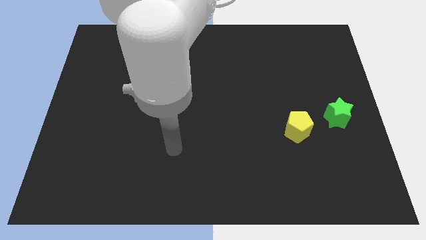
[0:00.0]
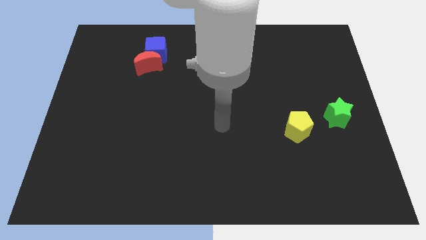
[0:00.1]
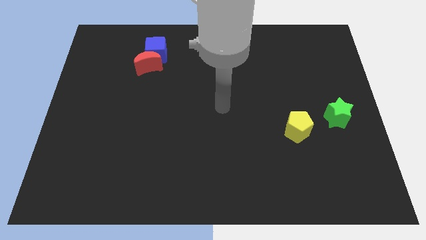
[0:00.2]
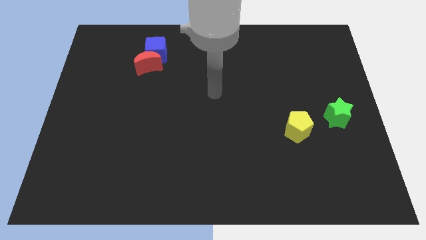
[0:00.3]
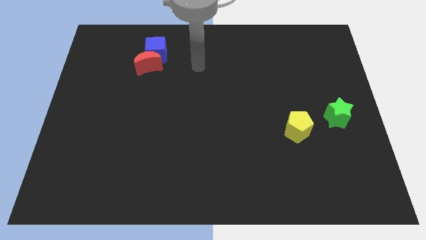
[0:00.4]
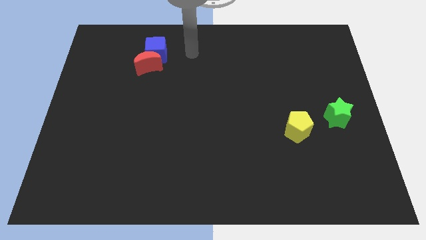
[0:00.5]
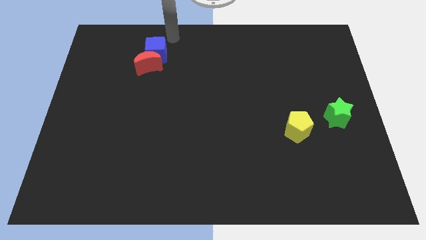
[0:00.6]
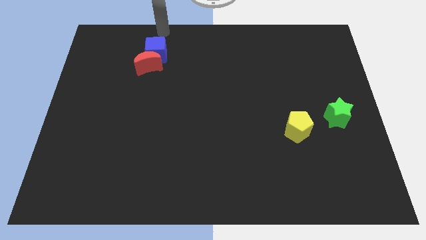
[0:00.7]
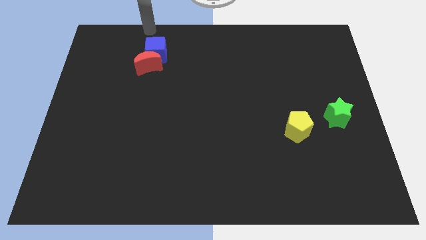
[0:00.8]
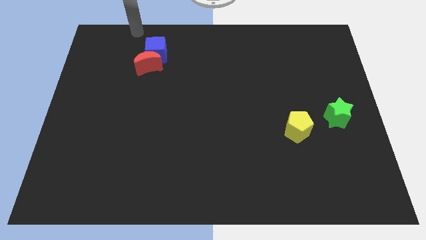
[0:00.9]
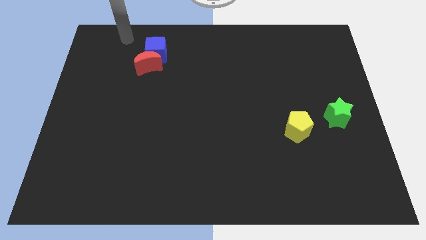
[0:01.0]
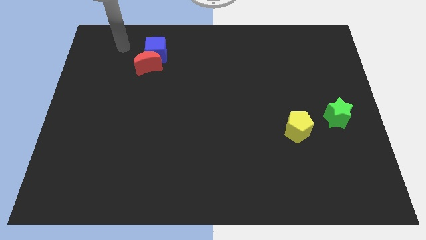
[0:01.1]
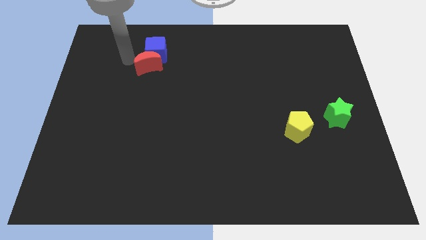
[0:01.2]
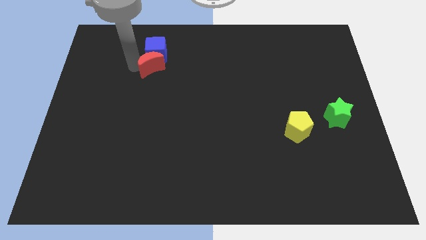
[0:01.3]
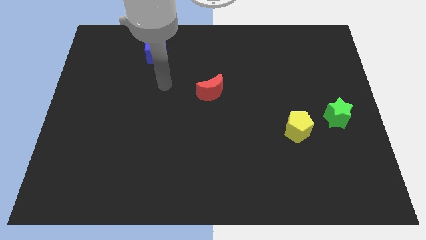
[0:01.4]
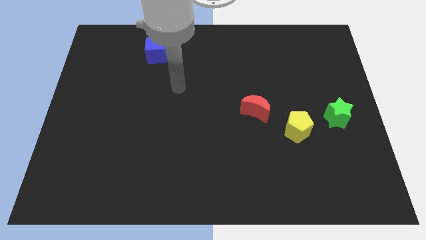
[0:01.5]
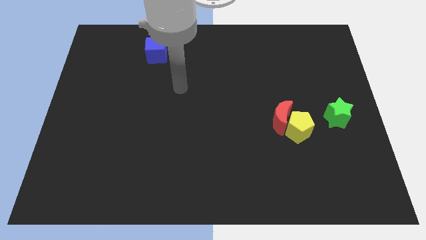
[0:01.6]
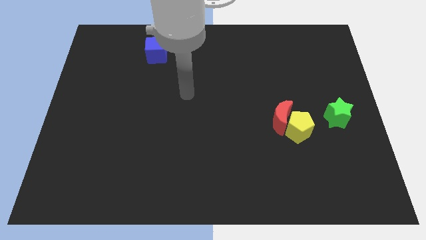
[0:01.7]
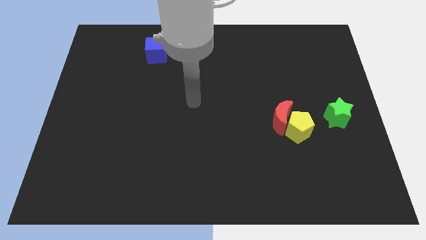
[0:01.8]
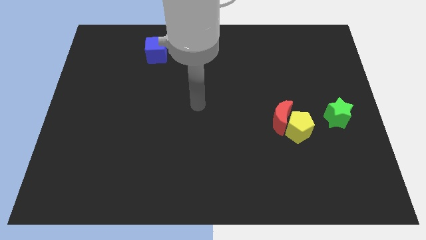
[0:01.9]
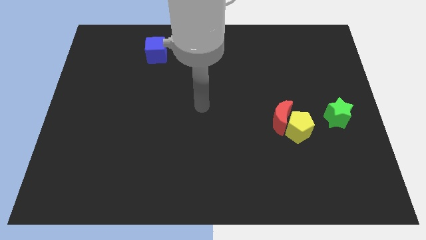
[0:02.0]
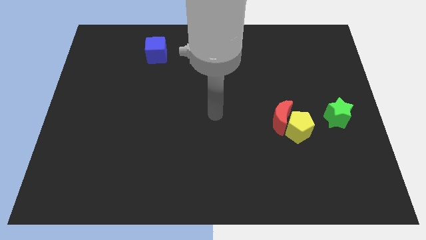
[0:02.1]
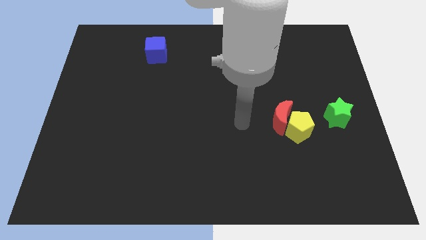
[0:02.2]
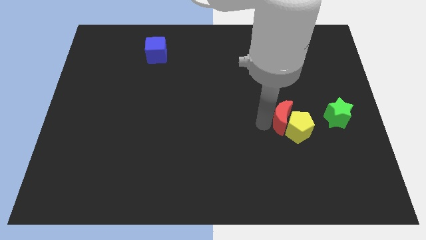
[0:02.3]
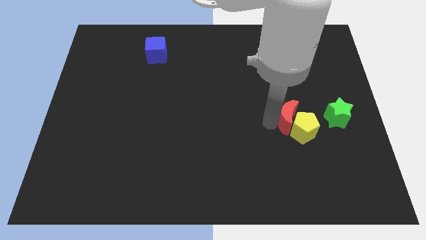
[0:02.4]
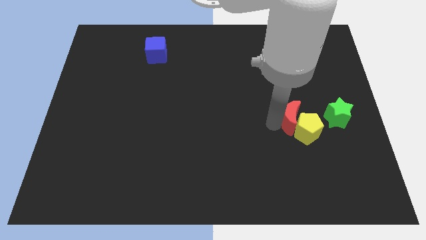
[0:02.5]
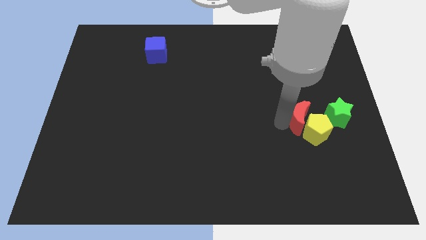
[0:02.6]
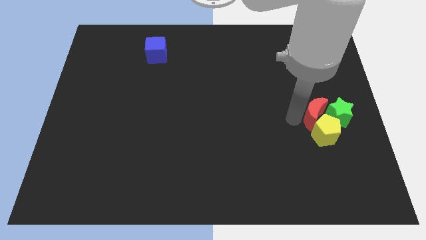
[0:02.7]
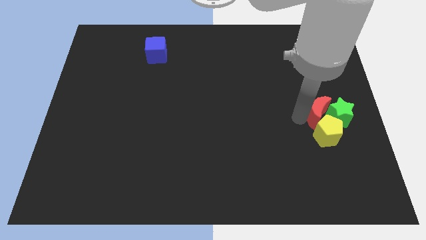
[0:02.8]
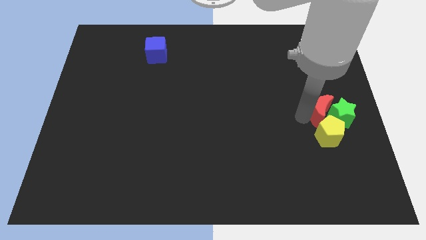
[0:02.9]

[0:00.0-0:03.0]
move the red moon close to the green block

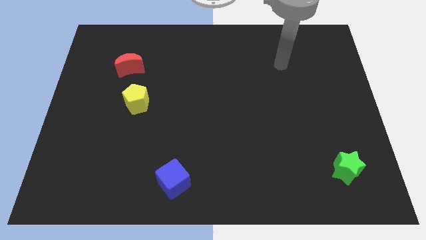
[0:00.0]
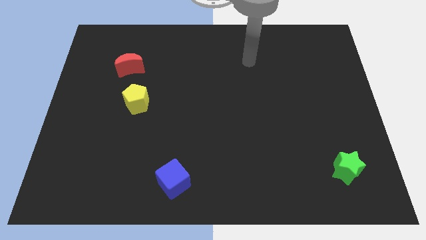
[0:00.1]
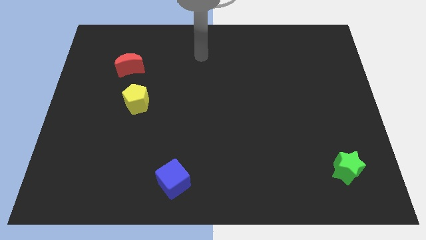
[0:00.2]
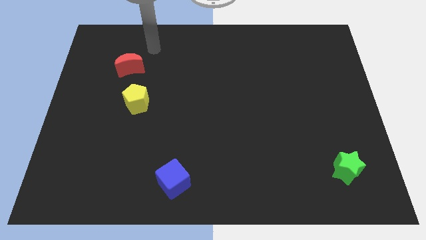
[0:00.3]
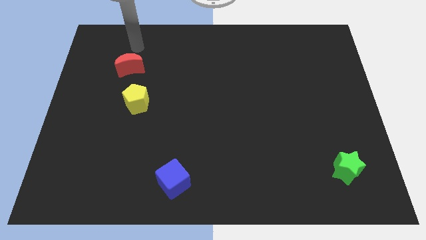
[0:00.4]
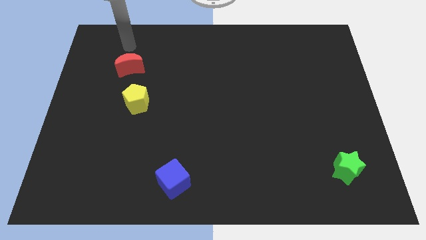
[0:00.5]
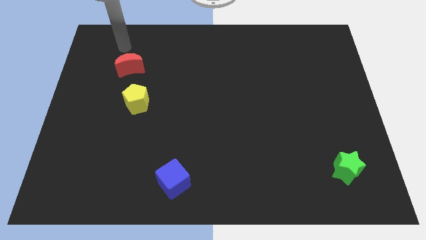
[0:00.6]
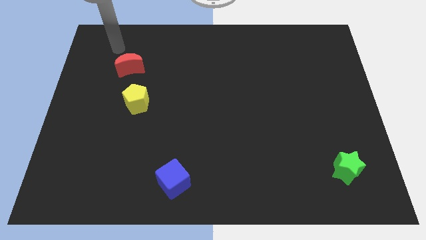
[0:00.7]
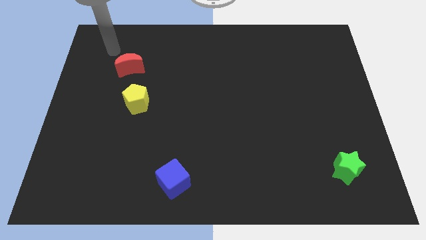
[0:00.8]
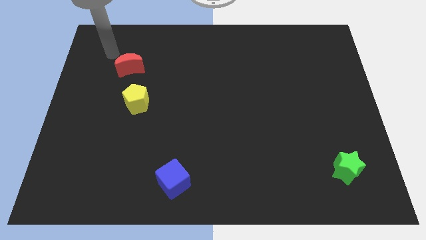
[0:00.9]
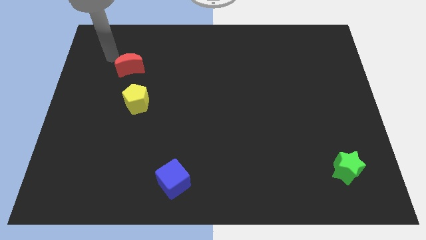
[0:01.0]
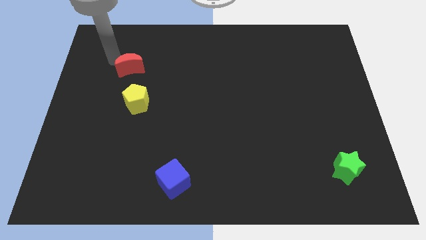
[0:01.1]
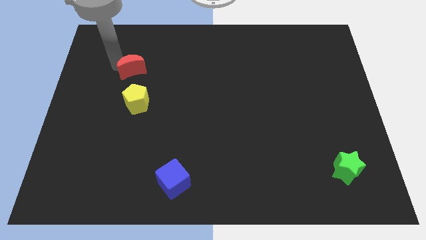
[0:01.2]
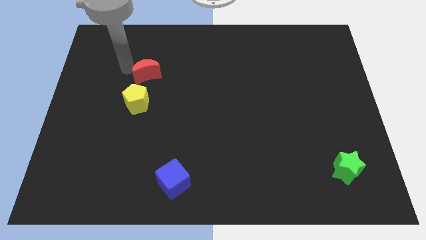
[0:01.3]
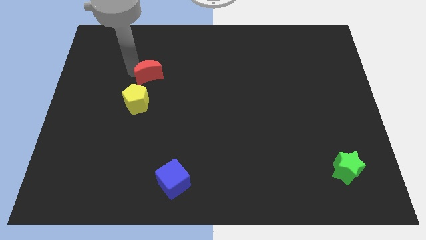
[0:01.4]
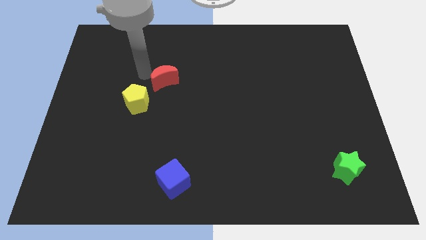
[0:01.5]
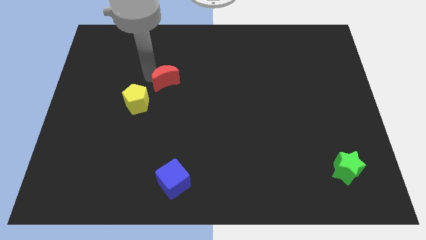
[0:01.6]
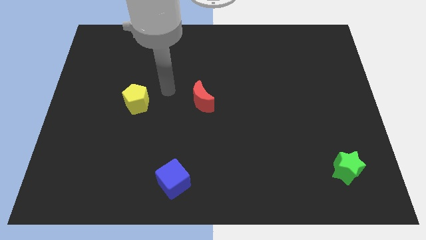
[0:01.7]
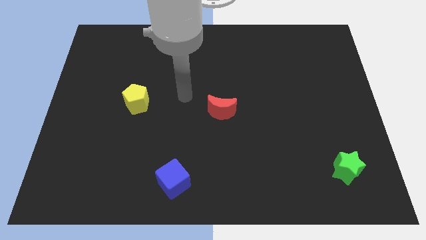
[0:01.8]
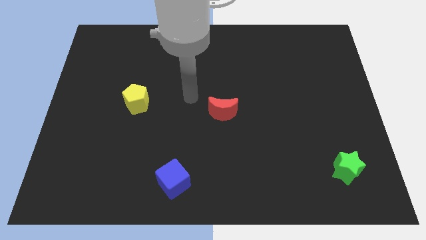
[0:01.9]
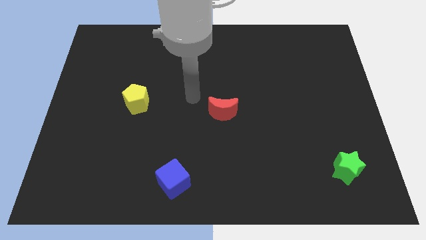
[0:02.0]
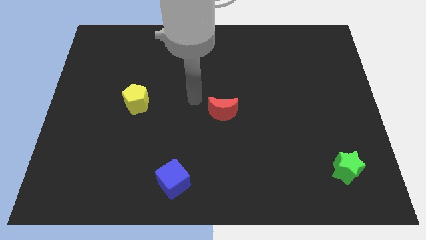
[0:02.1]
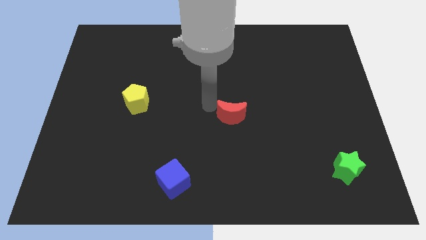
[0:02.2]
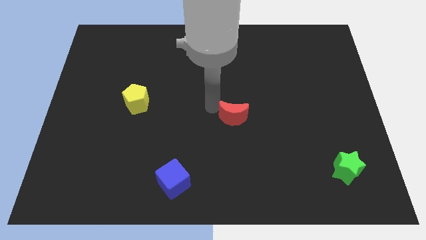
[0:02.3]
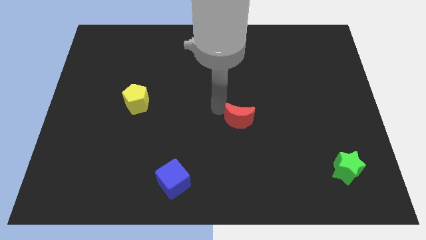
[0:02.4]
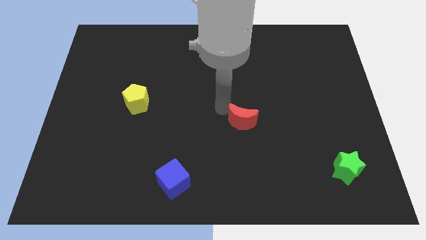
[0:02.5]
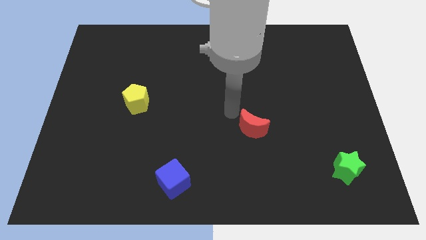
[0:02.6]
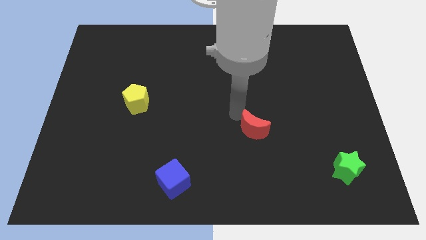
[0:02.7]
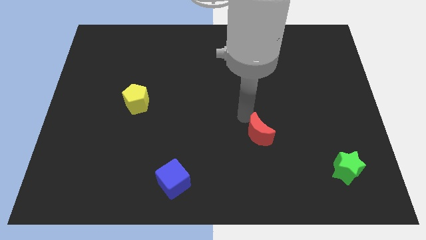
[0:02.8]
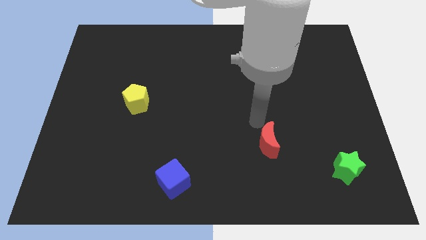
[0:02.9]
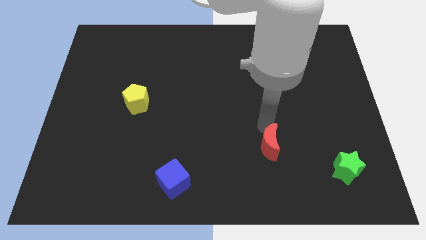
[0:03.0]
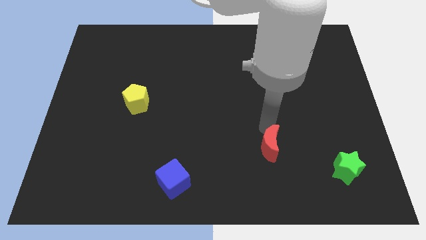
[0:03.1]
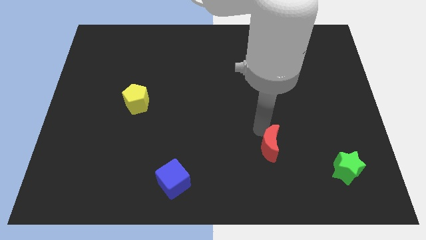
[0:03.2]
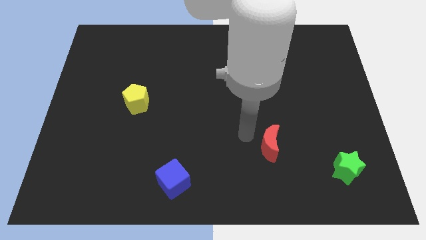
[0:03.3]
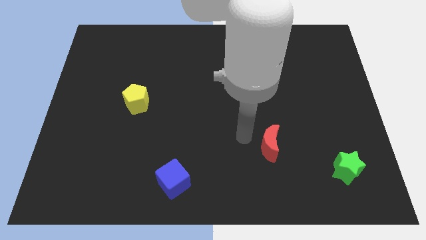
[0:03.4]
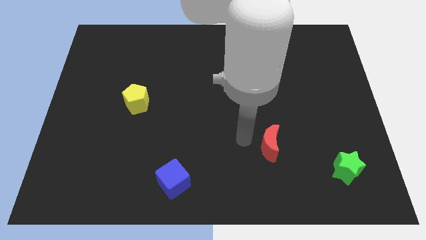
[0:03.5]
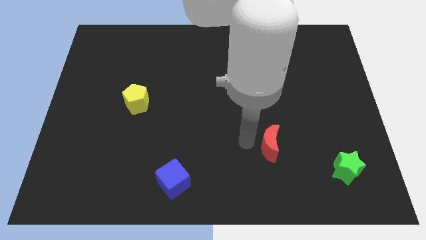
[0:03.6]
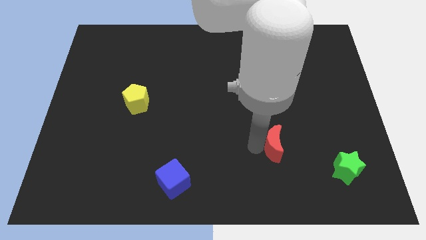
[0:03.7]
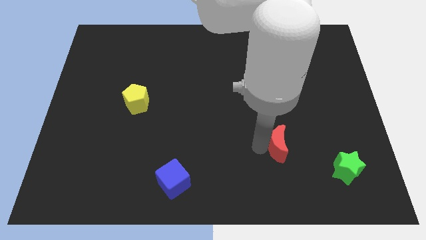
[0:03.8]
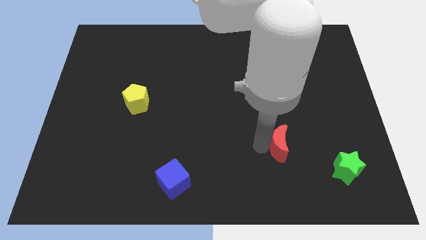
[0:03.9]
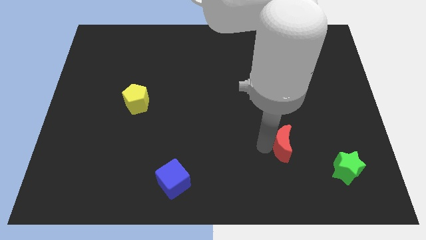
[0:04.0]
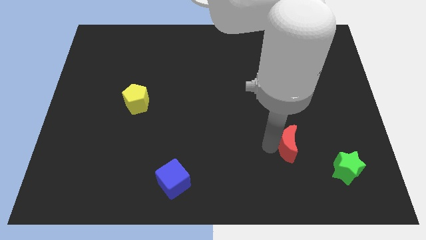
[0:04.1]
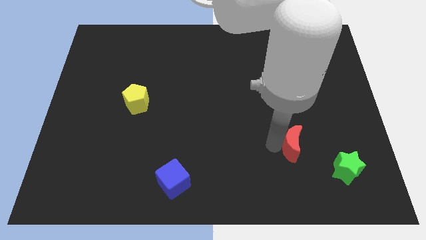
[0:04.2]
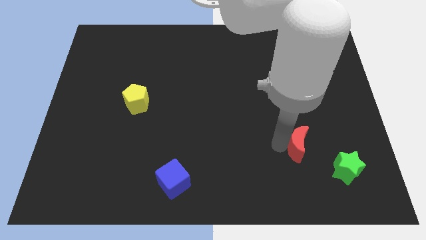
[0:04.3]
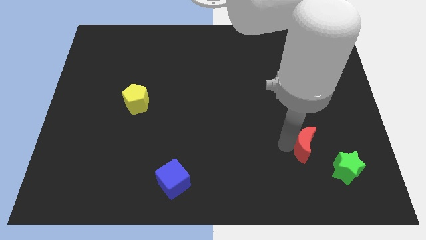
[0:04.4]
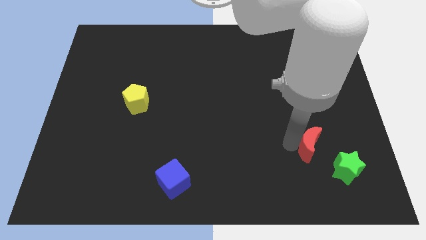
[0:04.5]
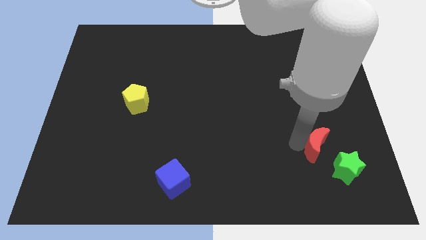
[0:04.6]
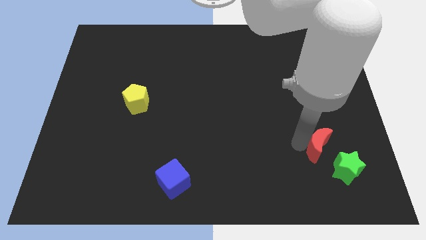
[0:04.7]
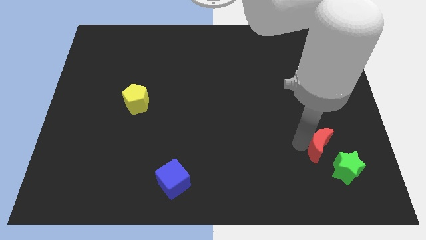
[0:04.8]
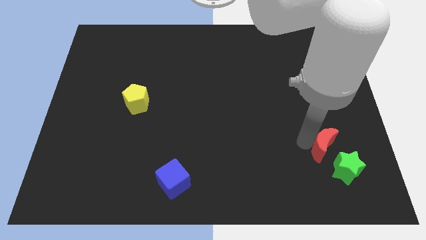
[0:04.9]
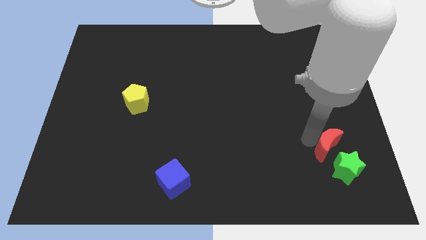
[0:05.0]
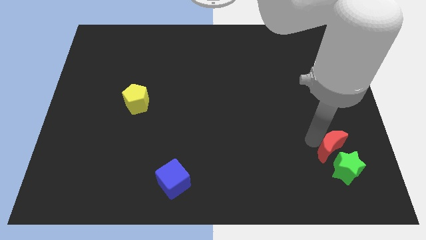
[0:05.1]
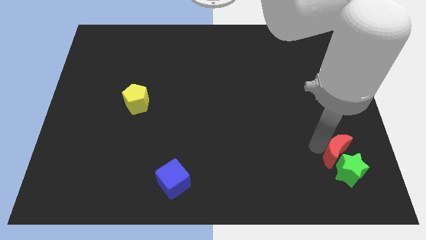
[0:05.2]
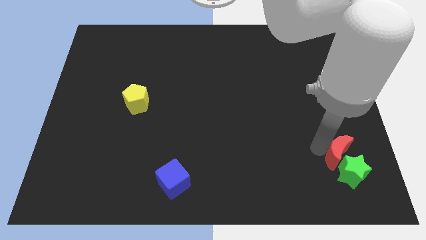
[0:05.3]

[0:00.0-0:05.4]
move the red moon next to the star

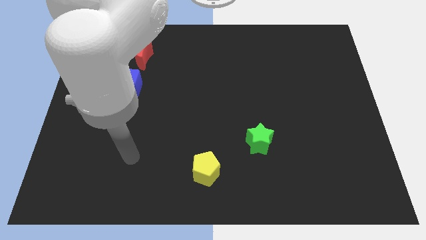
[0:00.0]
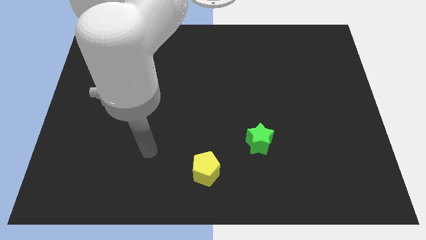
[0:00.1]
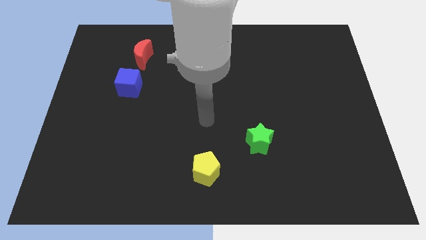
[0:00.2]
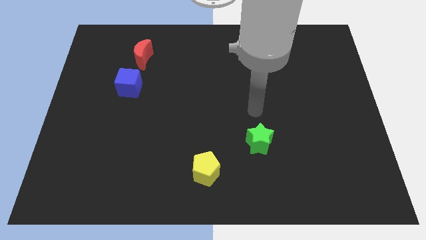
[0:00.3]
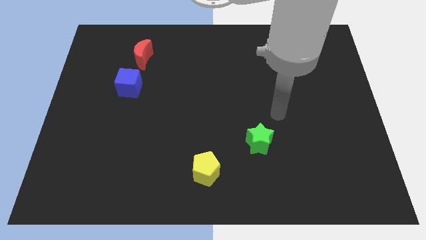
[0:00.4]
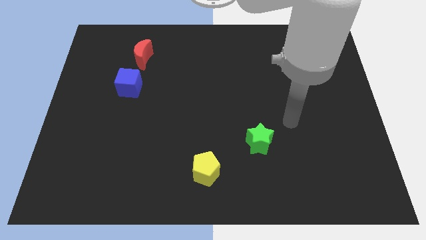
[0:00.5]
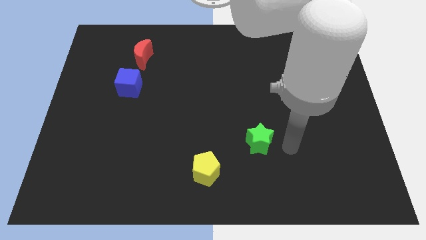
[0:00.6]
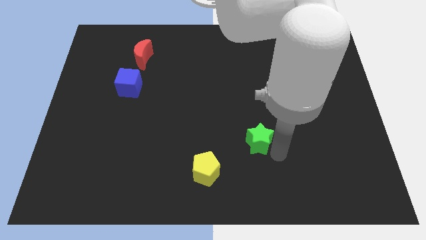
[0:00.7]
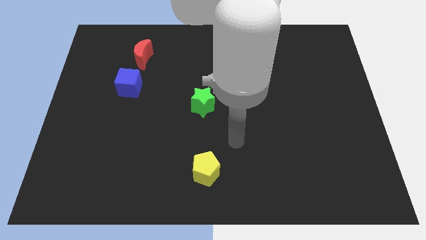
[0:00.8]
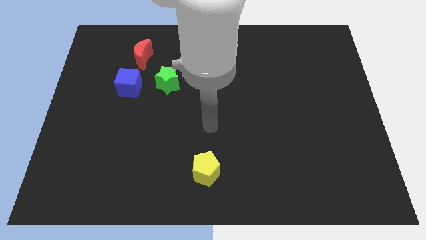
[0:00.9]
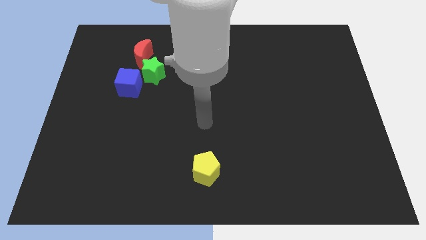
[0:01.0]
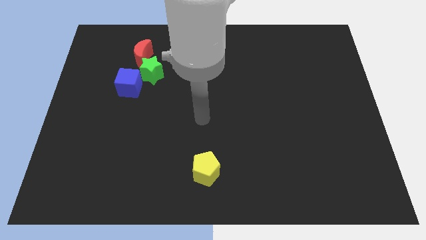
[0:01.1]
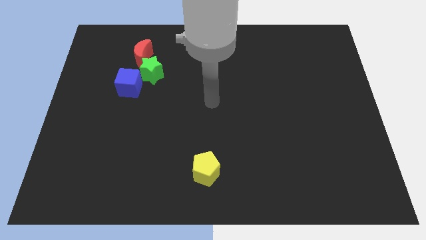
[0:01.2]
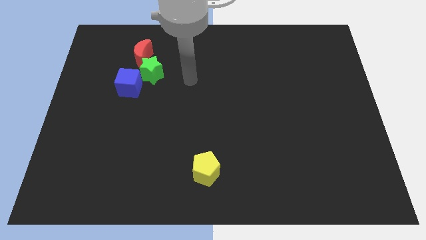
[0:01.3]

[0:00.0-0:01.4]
move the green star close to the blue block
